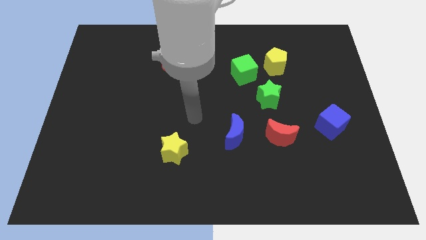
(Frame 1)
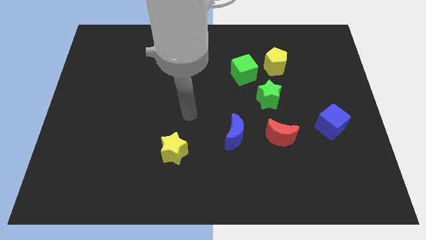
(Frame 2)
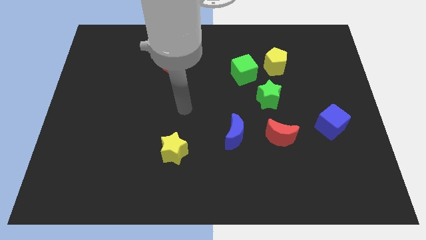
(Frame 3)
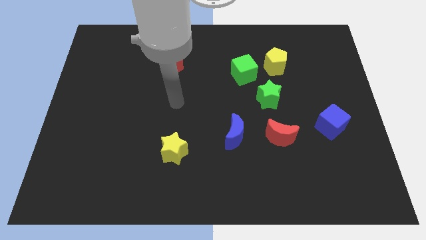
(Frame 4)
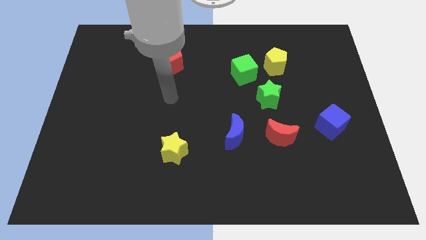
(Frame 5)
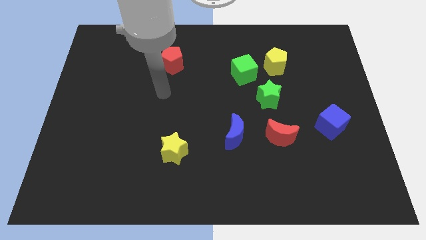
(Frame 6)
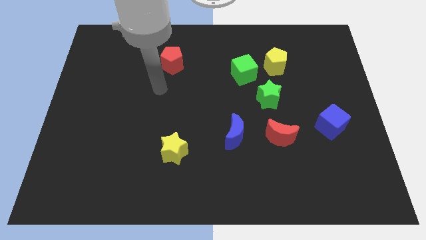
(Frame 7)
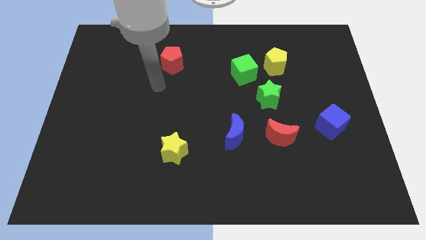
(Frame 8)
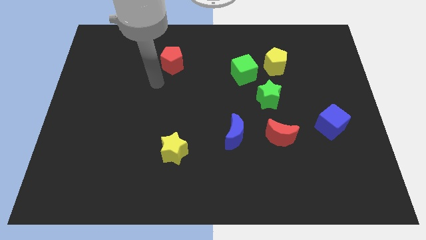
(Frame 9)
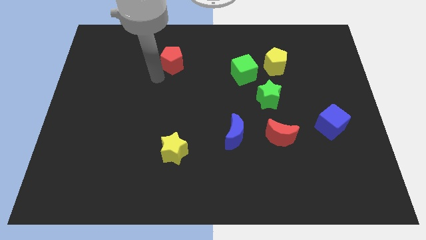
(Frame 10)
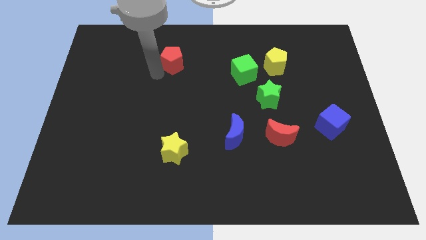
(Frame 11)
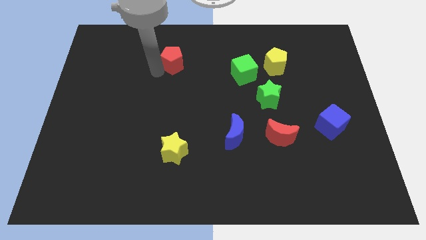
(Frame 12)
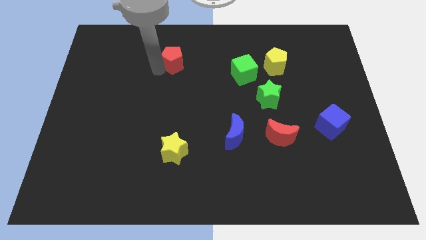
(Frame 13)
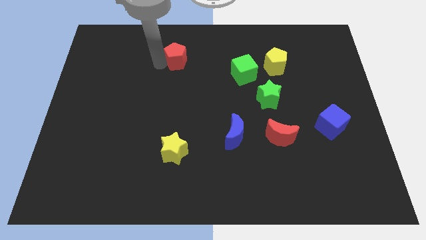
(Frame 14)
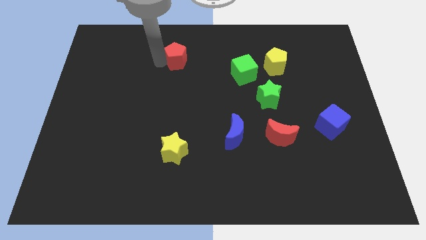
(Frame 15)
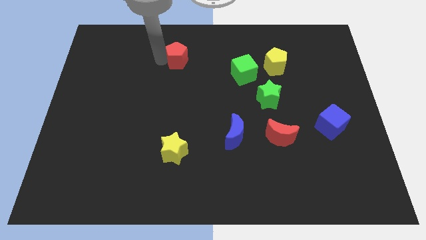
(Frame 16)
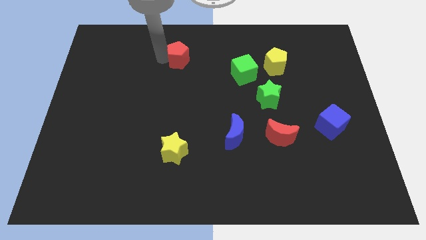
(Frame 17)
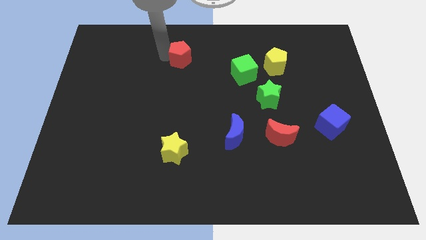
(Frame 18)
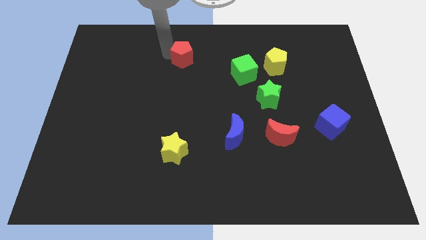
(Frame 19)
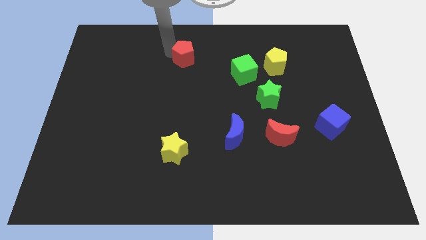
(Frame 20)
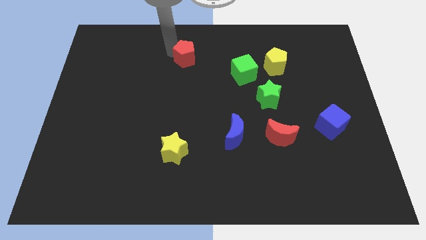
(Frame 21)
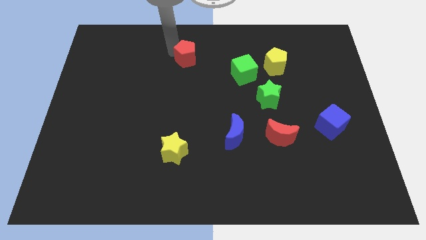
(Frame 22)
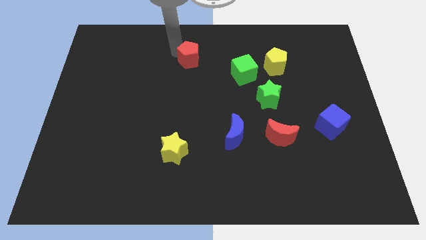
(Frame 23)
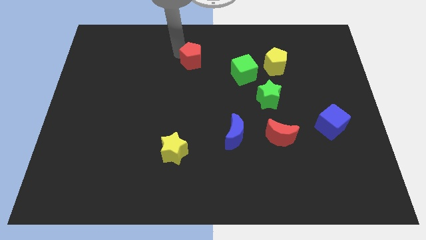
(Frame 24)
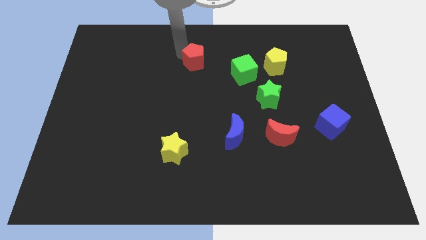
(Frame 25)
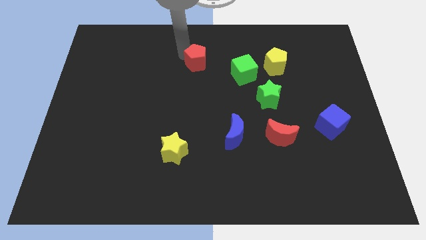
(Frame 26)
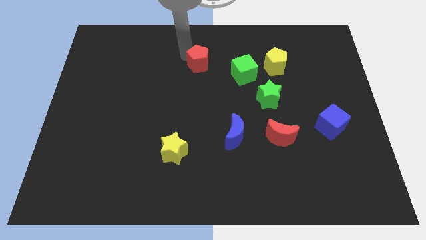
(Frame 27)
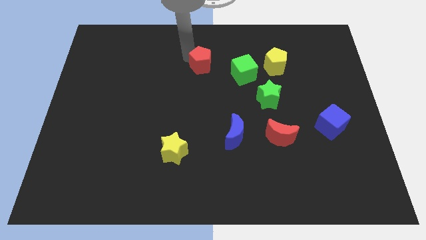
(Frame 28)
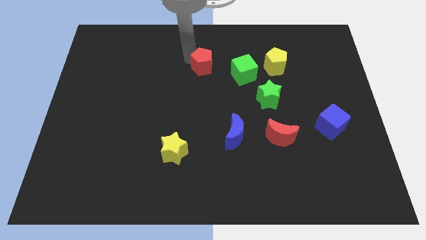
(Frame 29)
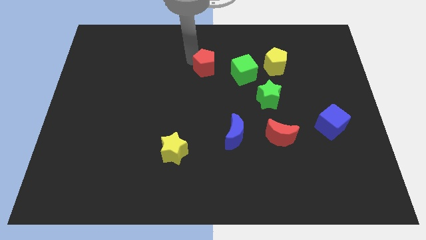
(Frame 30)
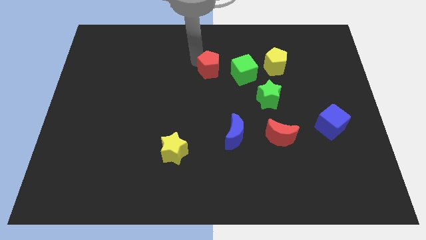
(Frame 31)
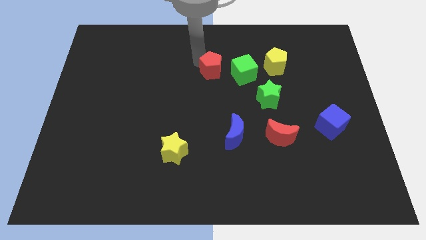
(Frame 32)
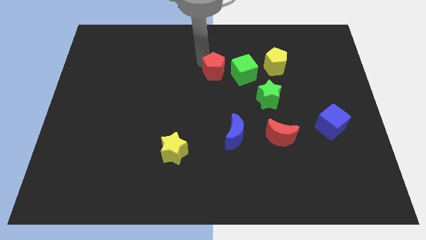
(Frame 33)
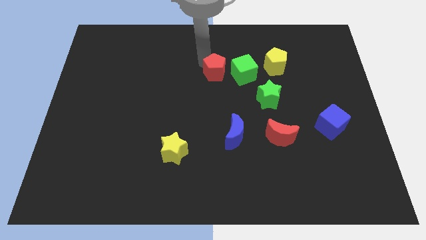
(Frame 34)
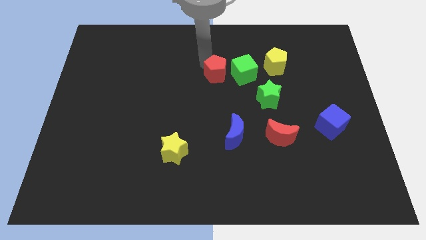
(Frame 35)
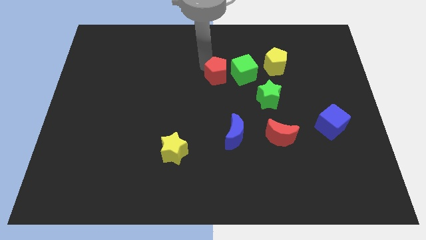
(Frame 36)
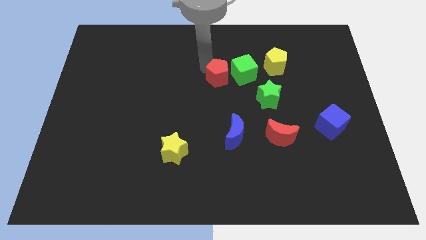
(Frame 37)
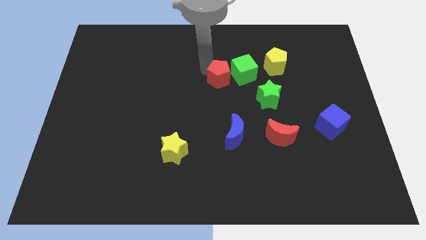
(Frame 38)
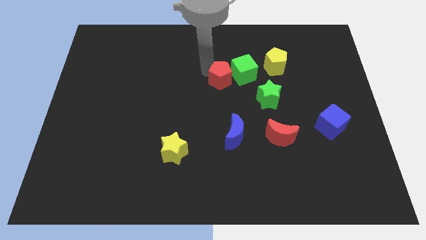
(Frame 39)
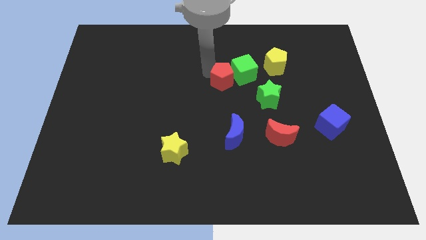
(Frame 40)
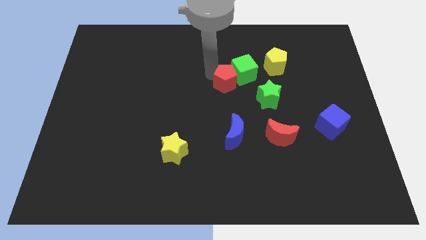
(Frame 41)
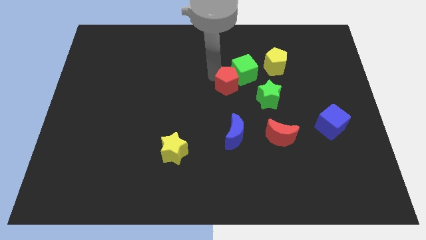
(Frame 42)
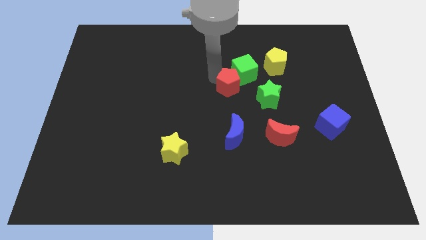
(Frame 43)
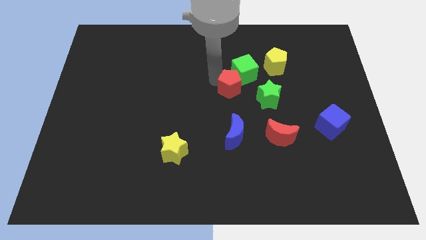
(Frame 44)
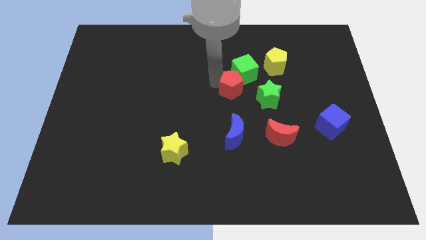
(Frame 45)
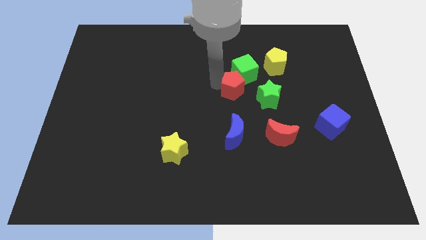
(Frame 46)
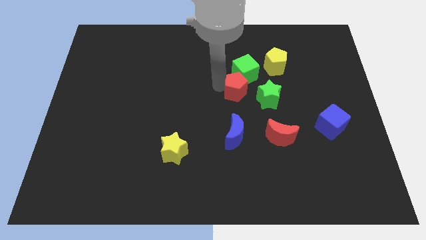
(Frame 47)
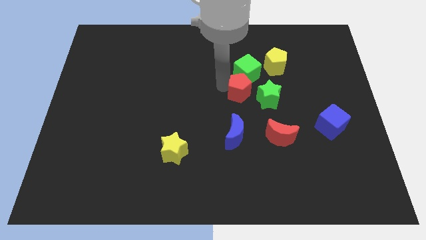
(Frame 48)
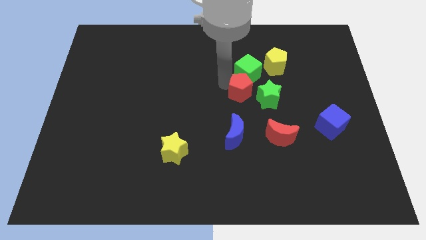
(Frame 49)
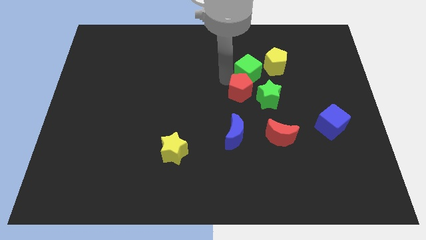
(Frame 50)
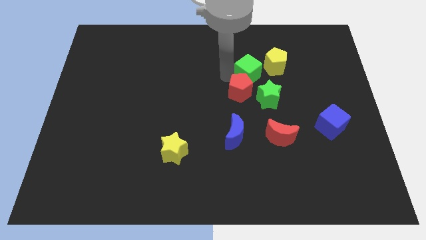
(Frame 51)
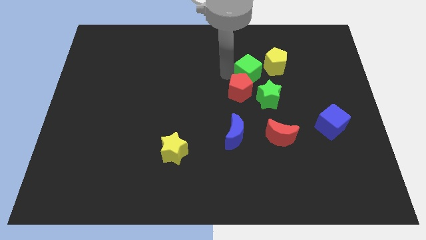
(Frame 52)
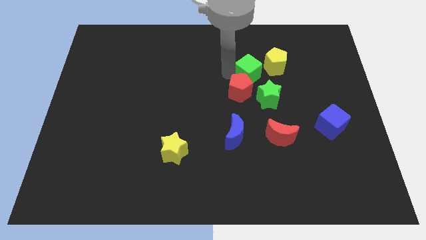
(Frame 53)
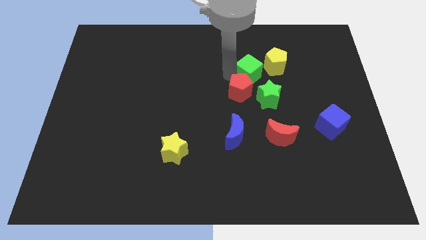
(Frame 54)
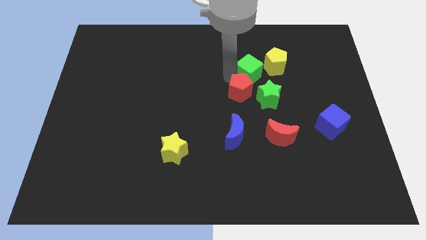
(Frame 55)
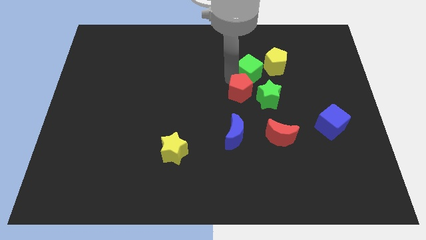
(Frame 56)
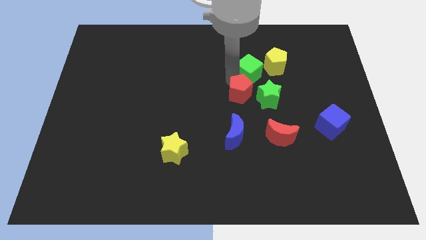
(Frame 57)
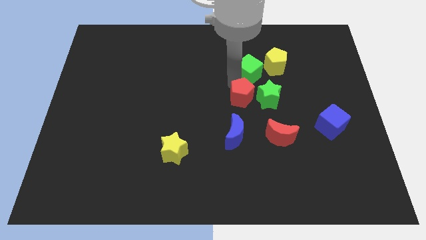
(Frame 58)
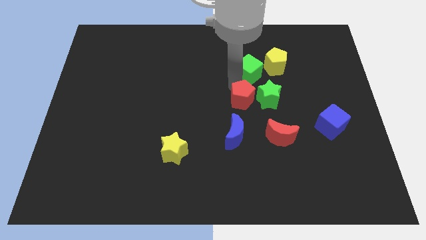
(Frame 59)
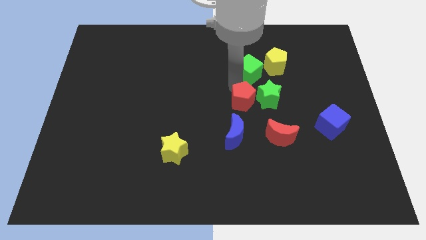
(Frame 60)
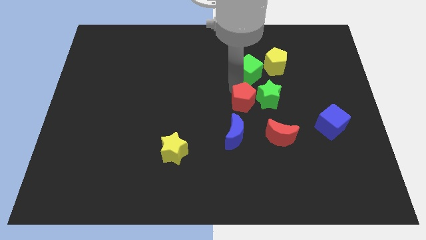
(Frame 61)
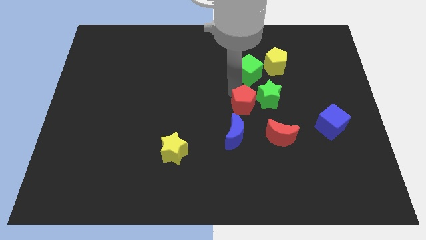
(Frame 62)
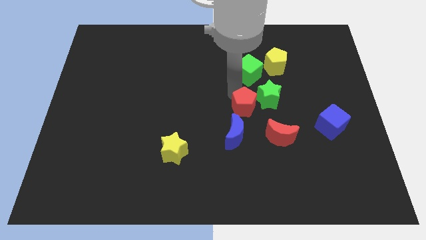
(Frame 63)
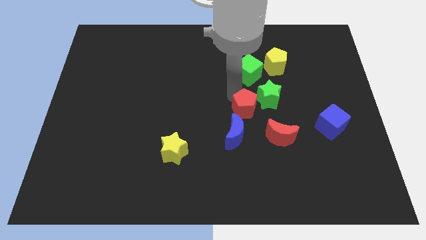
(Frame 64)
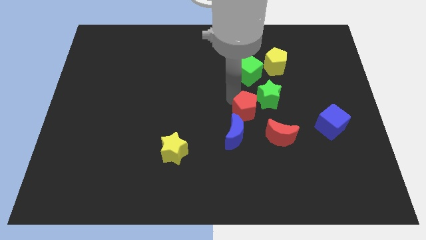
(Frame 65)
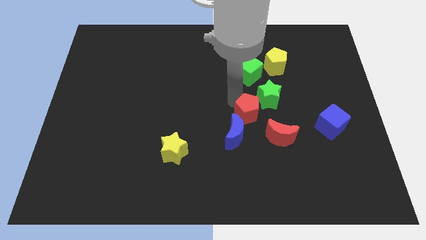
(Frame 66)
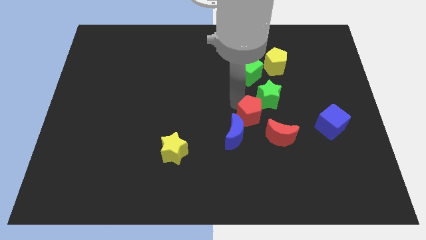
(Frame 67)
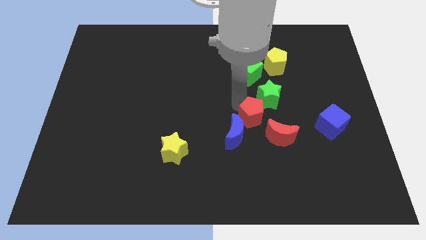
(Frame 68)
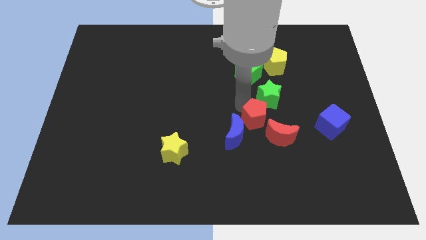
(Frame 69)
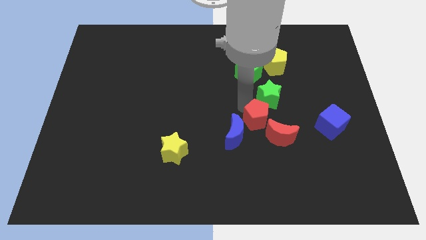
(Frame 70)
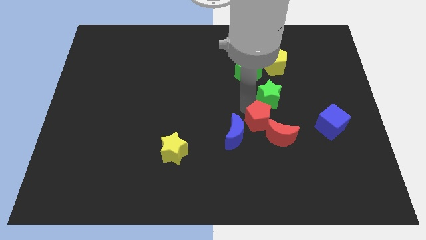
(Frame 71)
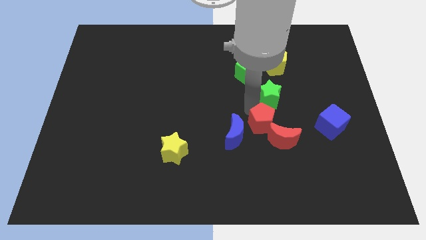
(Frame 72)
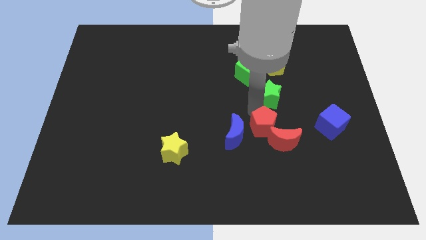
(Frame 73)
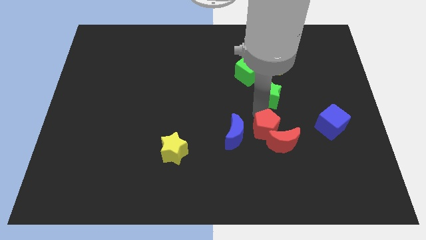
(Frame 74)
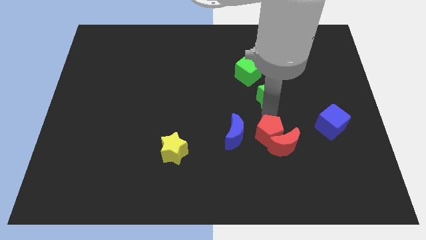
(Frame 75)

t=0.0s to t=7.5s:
push the red pentagon towards the red moon

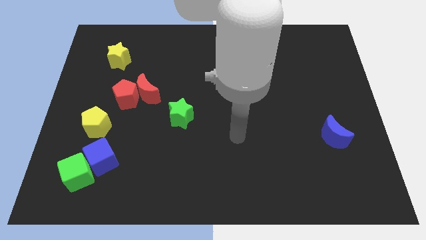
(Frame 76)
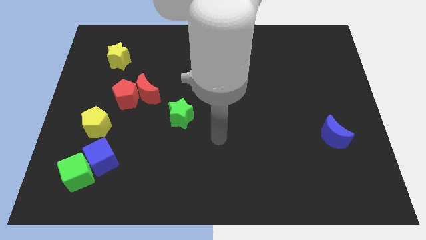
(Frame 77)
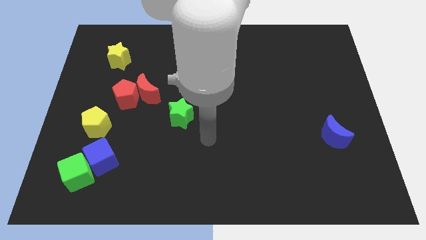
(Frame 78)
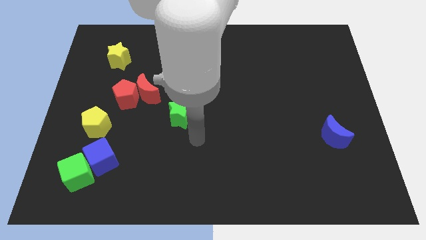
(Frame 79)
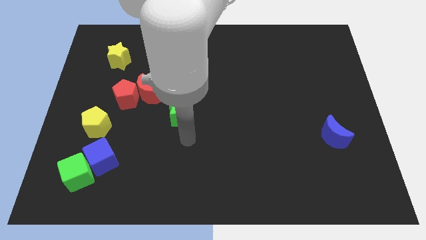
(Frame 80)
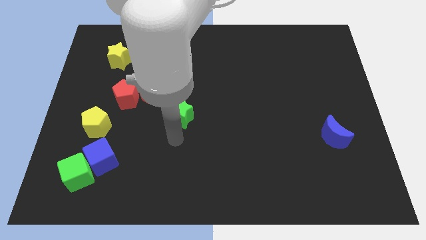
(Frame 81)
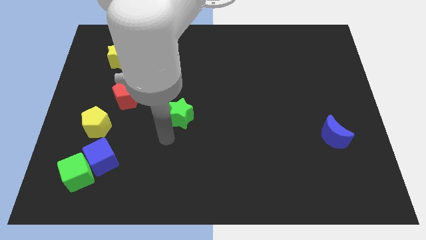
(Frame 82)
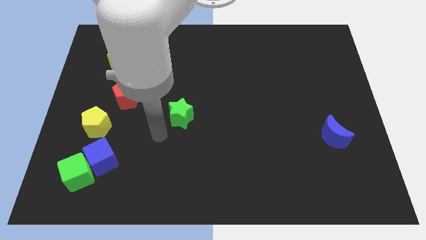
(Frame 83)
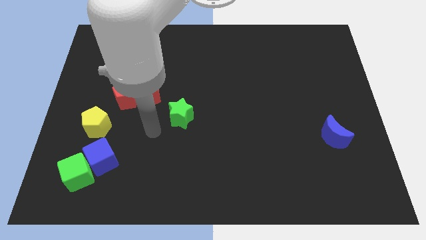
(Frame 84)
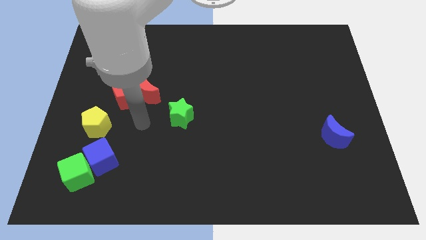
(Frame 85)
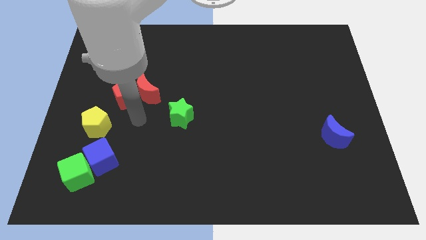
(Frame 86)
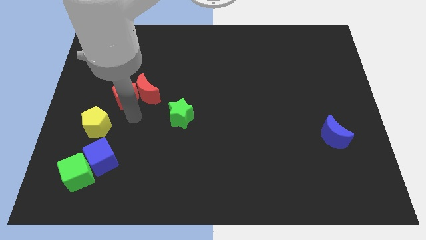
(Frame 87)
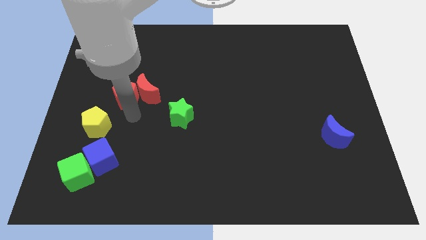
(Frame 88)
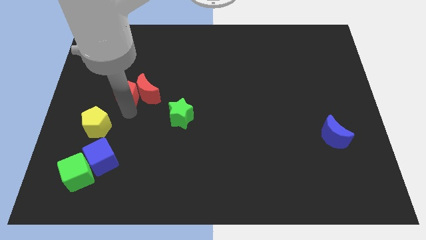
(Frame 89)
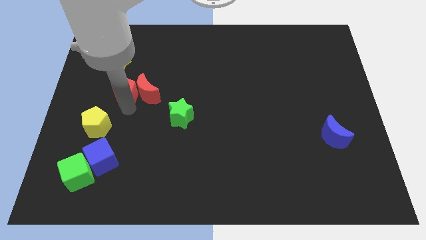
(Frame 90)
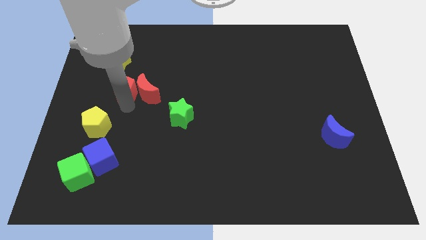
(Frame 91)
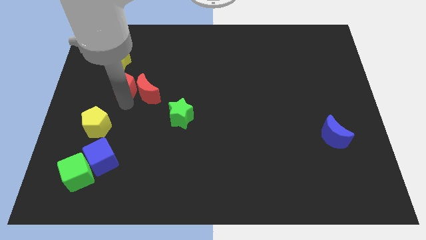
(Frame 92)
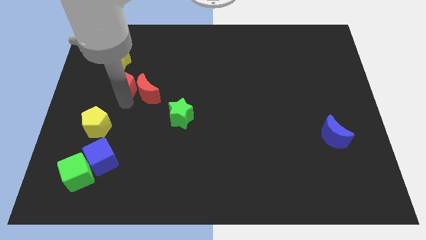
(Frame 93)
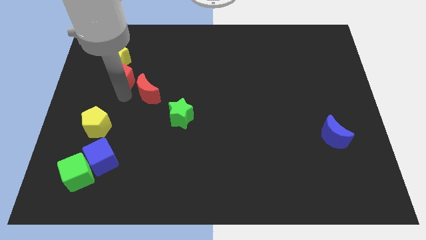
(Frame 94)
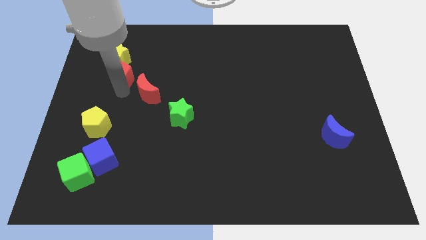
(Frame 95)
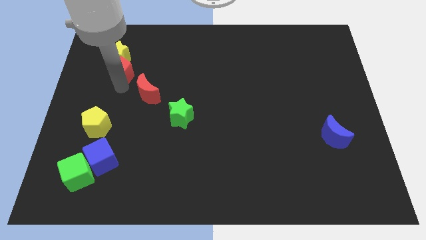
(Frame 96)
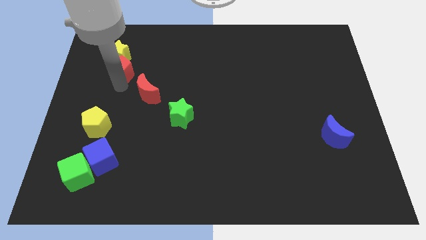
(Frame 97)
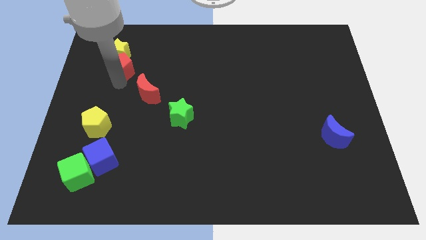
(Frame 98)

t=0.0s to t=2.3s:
put the red pentagon next to the yellow star
